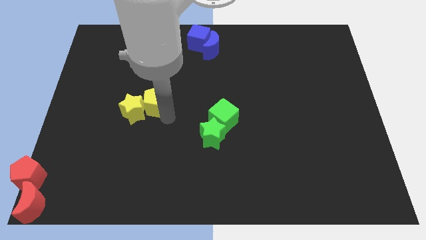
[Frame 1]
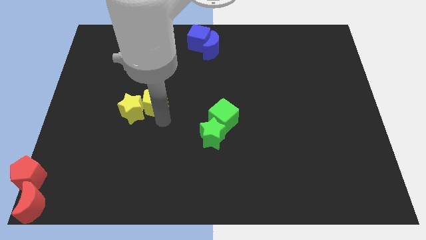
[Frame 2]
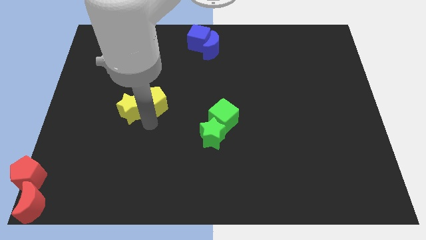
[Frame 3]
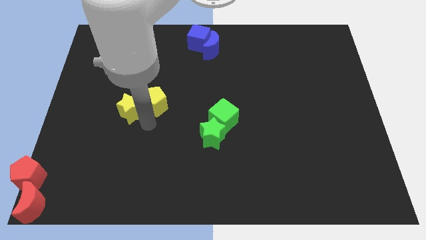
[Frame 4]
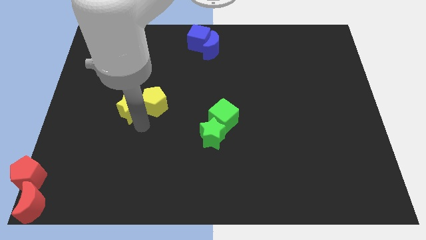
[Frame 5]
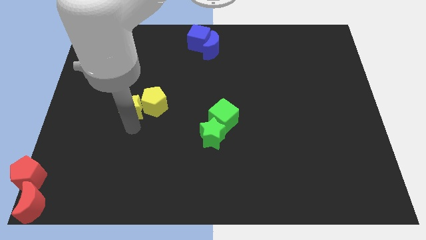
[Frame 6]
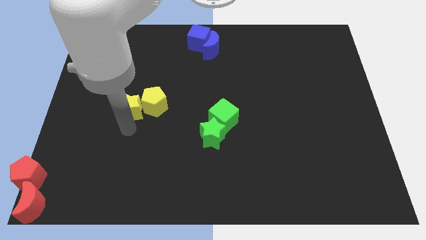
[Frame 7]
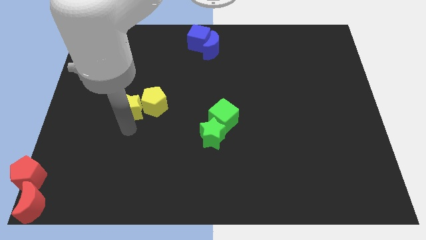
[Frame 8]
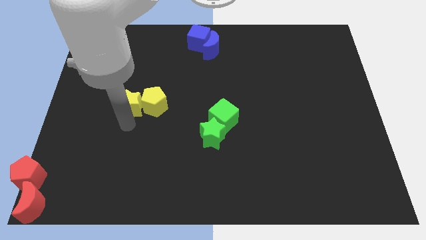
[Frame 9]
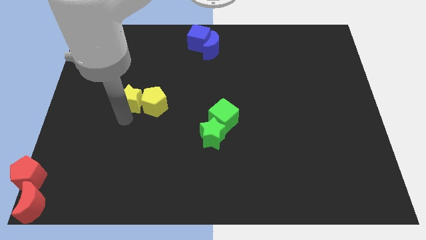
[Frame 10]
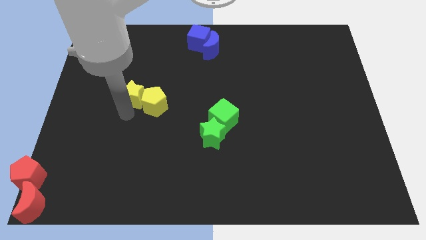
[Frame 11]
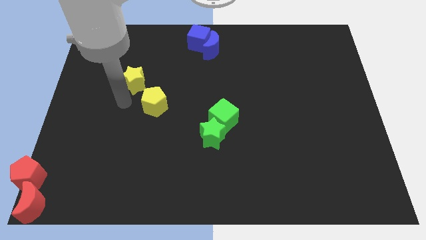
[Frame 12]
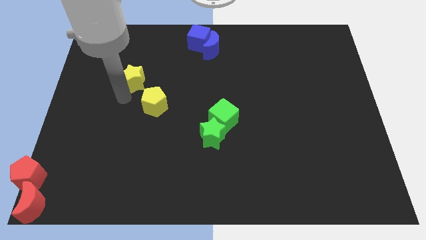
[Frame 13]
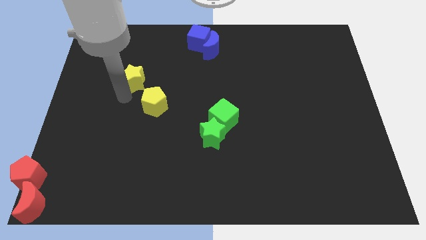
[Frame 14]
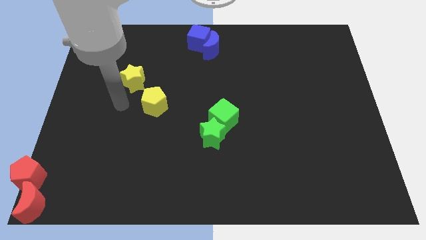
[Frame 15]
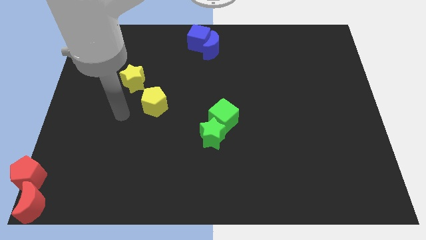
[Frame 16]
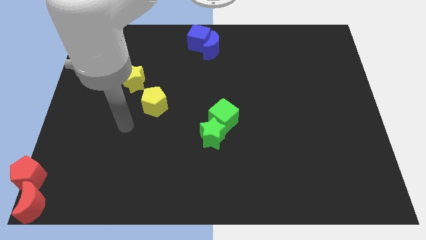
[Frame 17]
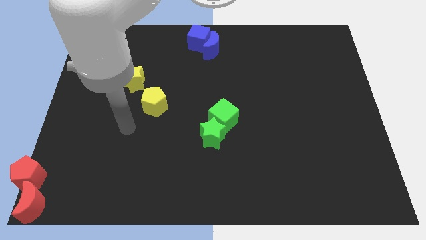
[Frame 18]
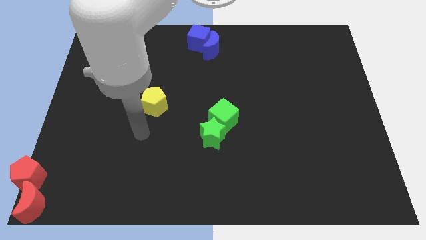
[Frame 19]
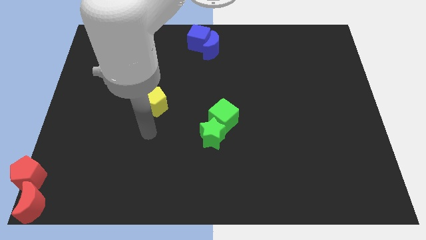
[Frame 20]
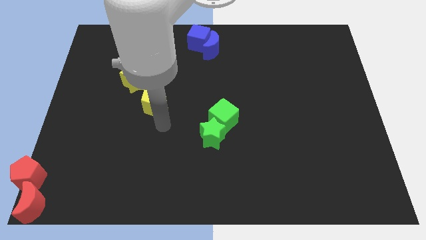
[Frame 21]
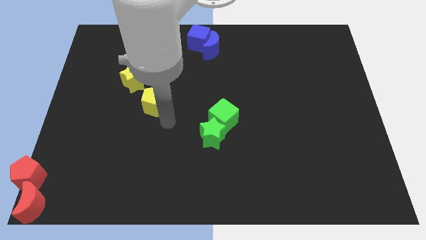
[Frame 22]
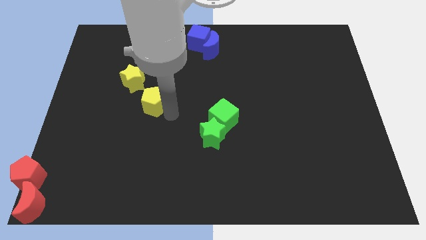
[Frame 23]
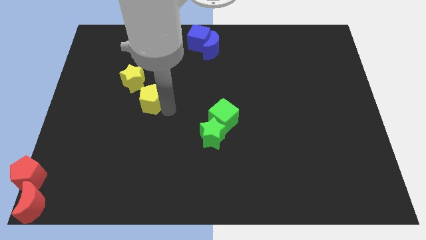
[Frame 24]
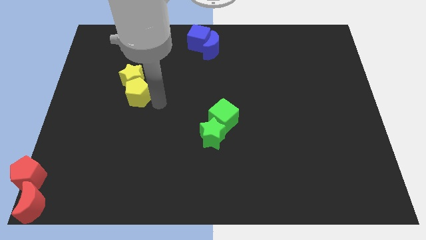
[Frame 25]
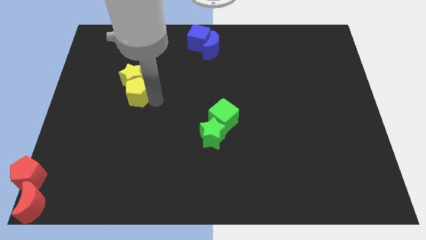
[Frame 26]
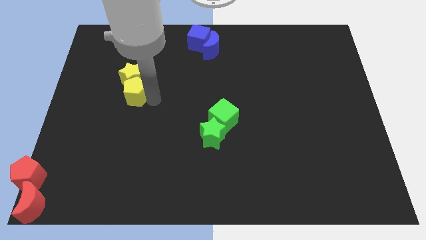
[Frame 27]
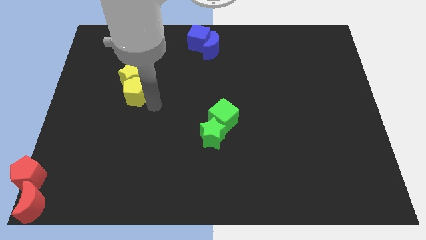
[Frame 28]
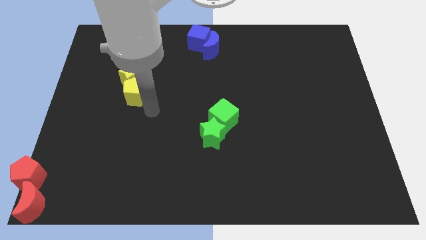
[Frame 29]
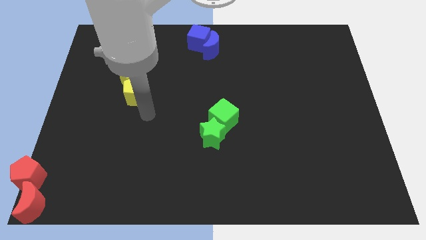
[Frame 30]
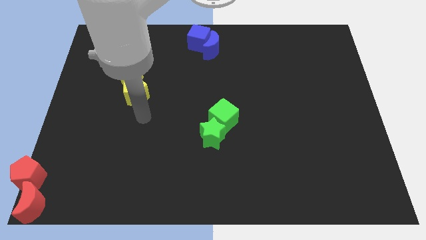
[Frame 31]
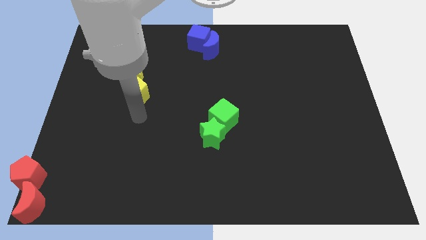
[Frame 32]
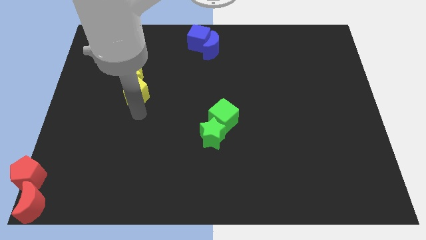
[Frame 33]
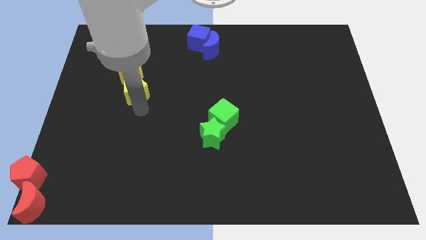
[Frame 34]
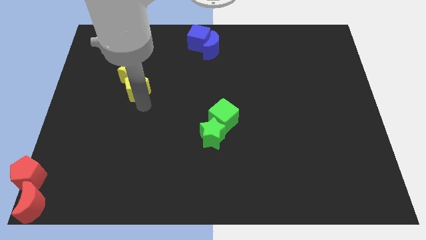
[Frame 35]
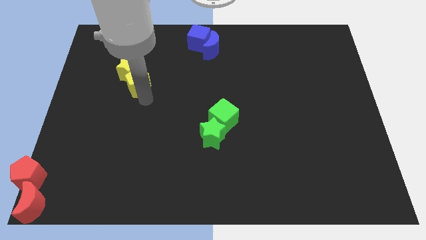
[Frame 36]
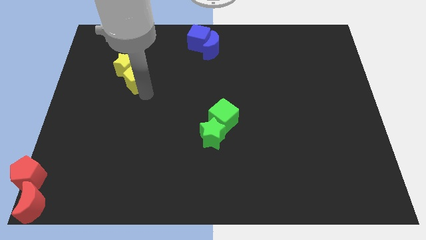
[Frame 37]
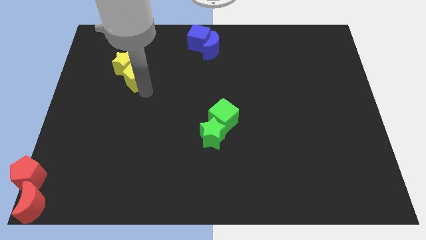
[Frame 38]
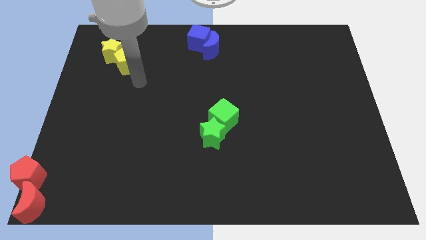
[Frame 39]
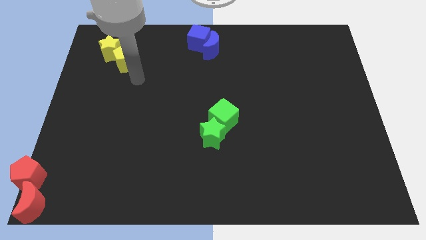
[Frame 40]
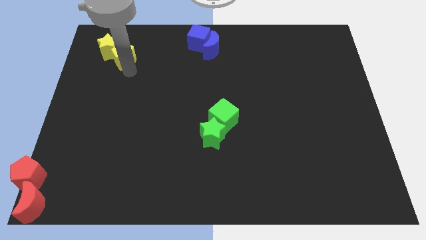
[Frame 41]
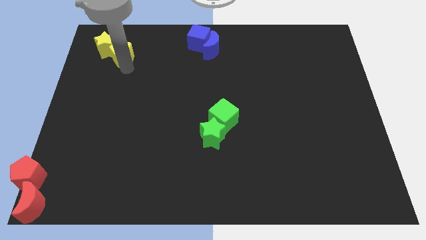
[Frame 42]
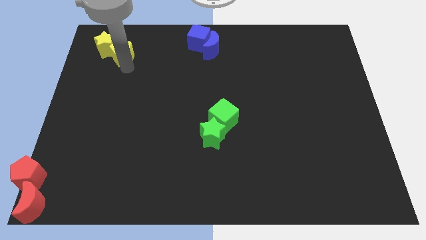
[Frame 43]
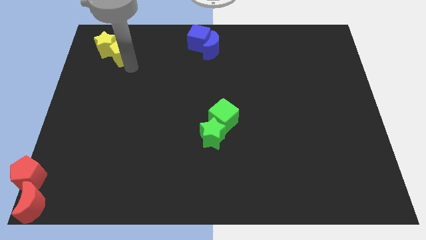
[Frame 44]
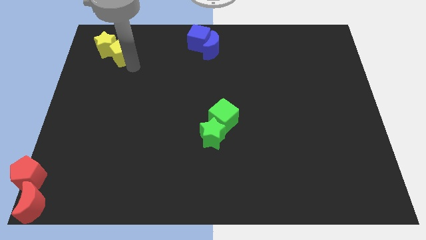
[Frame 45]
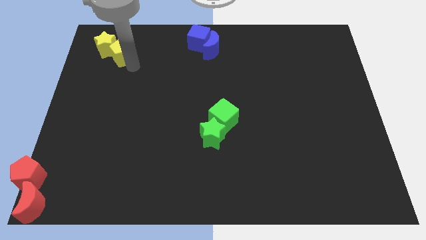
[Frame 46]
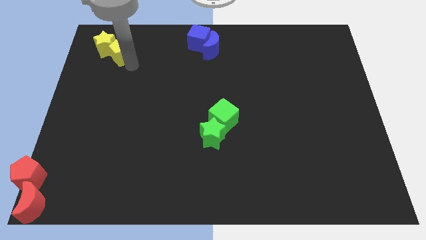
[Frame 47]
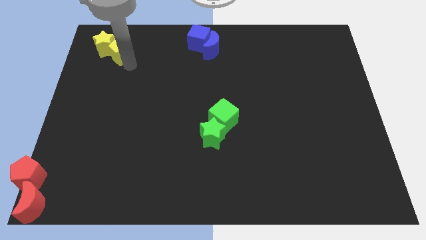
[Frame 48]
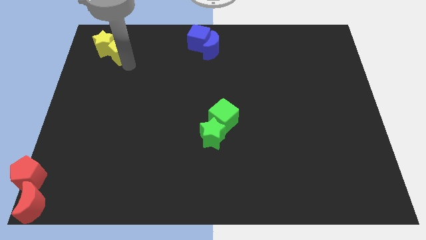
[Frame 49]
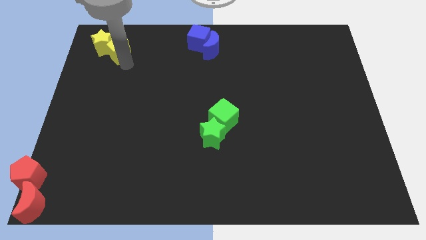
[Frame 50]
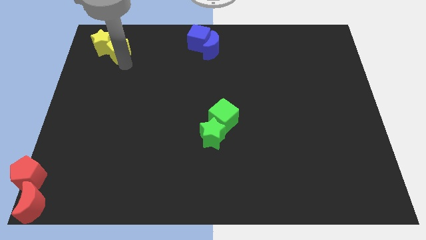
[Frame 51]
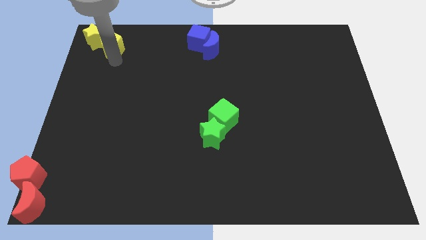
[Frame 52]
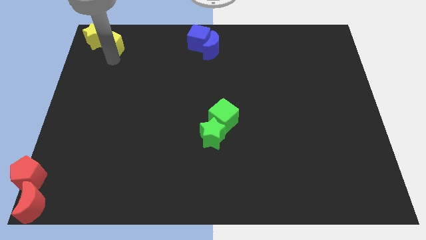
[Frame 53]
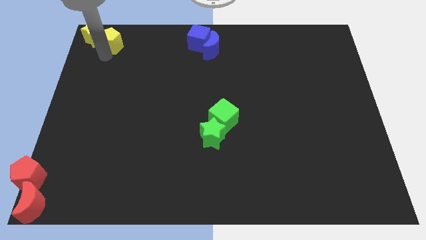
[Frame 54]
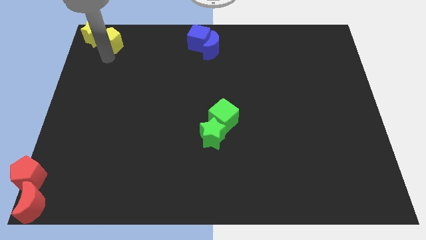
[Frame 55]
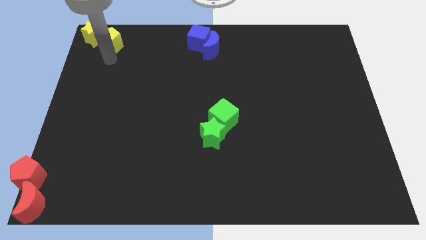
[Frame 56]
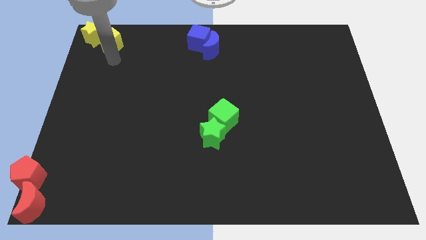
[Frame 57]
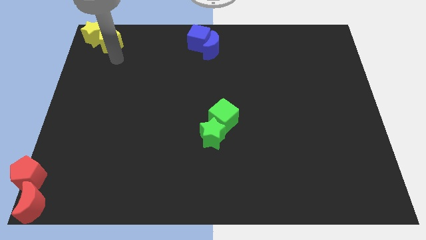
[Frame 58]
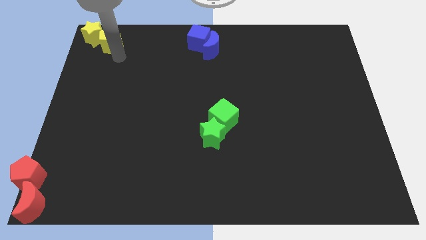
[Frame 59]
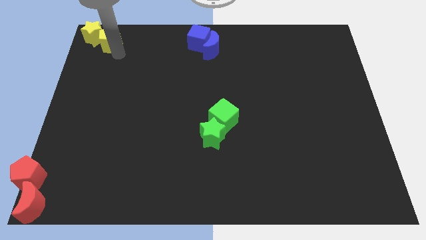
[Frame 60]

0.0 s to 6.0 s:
slide the yellow blocks to the top left of the board

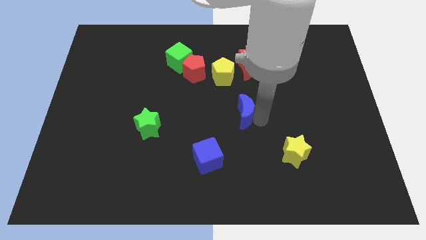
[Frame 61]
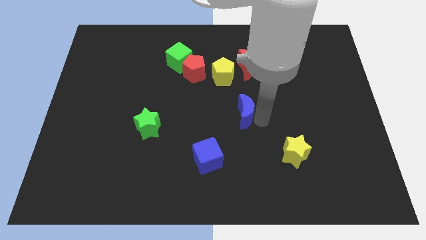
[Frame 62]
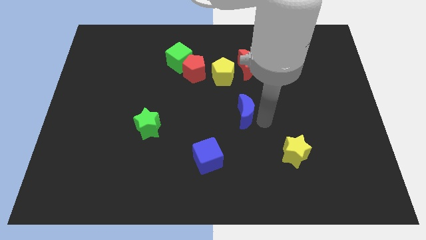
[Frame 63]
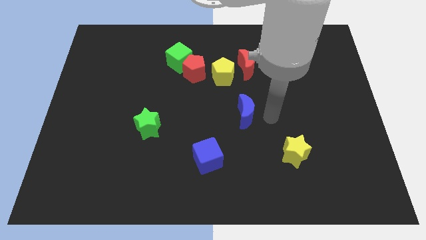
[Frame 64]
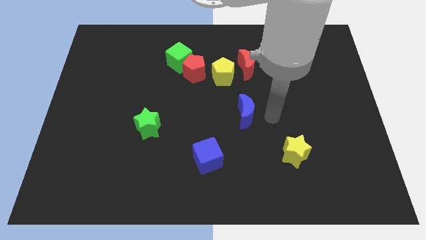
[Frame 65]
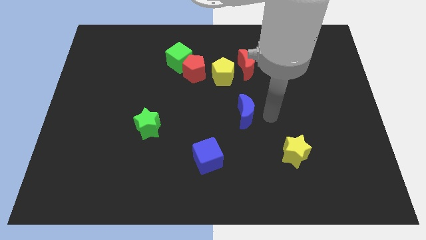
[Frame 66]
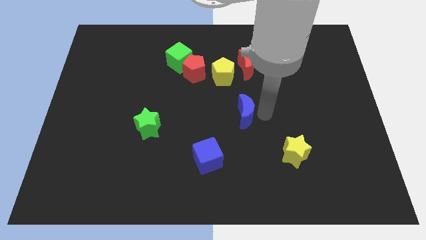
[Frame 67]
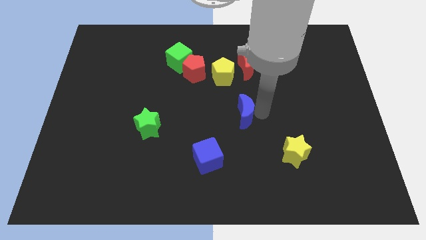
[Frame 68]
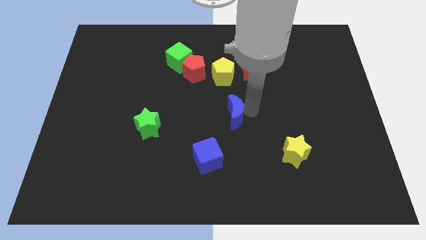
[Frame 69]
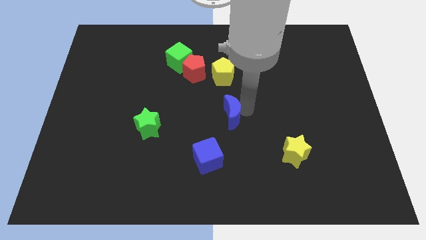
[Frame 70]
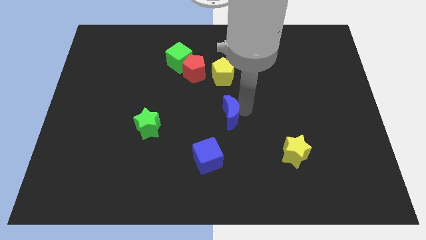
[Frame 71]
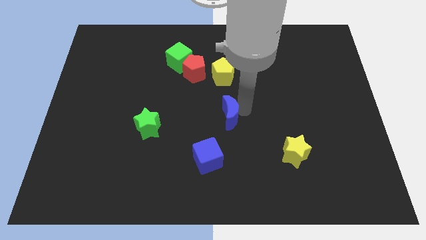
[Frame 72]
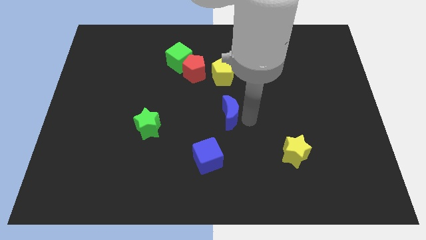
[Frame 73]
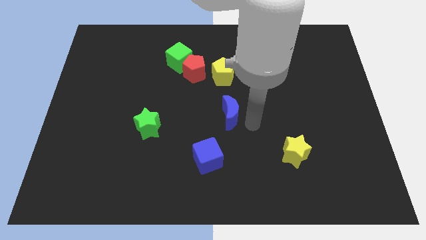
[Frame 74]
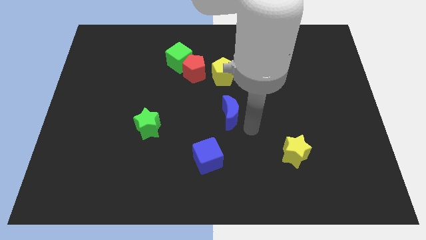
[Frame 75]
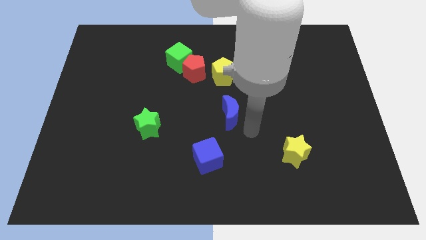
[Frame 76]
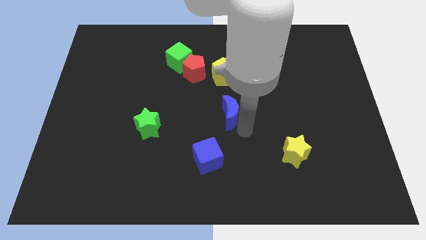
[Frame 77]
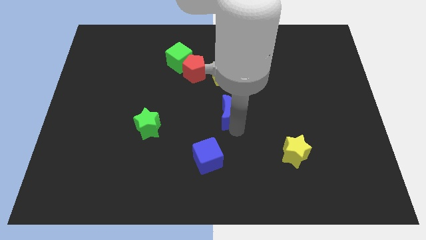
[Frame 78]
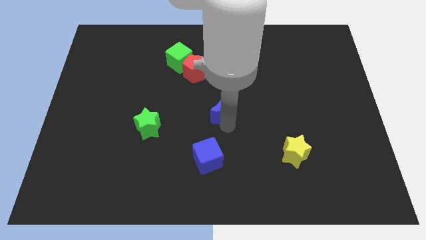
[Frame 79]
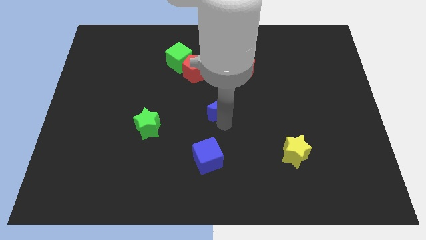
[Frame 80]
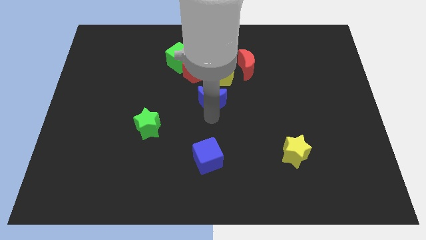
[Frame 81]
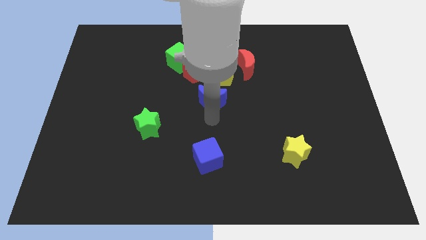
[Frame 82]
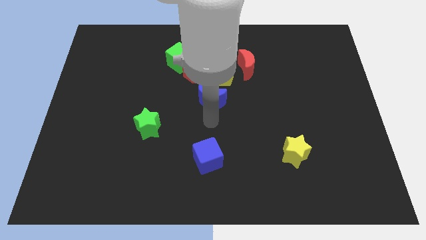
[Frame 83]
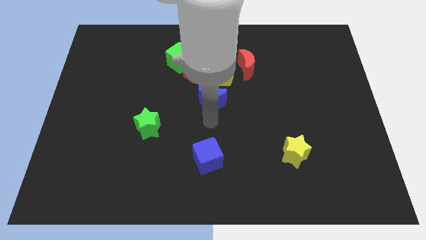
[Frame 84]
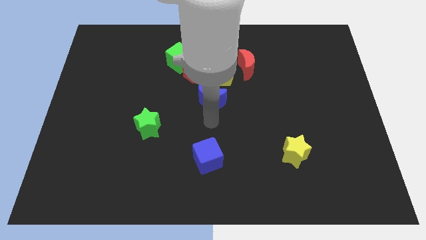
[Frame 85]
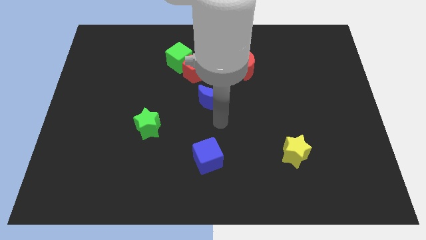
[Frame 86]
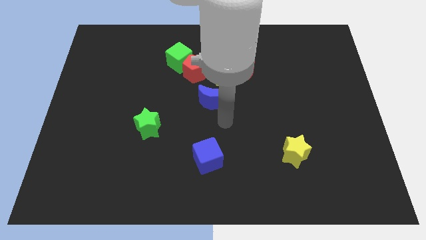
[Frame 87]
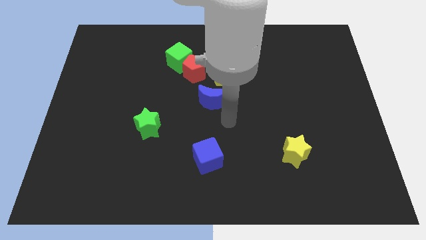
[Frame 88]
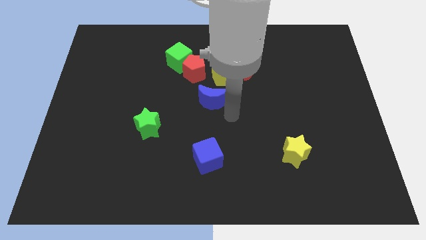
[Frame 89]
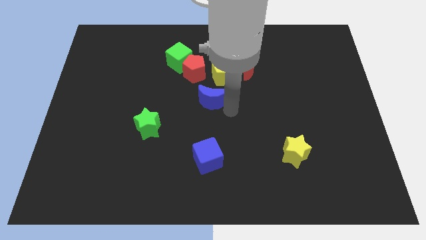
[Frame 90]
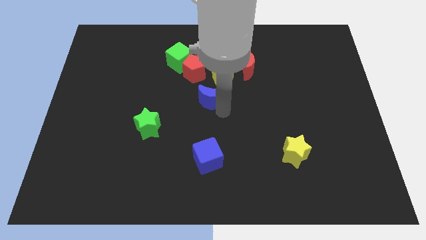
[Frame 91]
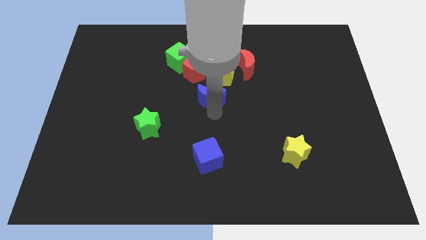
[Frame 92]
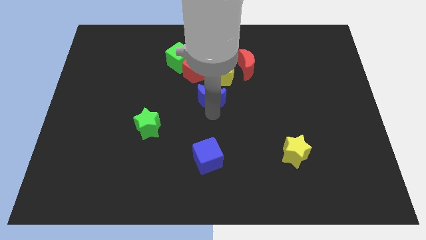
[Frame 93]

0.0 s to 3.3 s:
put the blue moon in between the yellow pentagon and blue cube
